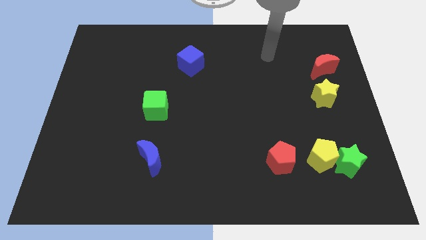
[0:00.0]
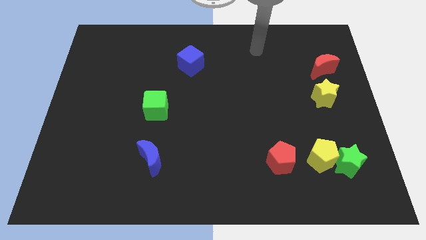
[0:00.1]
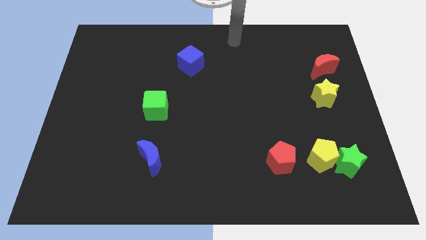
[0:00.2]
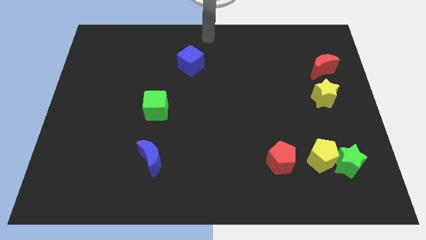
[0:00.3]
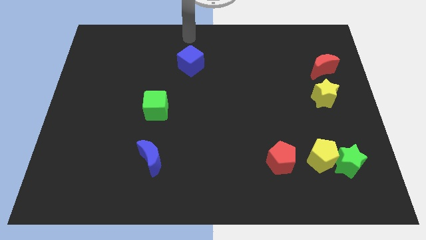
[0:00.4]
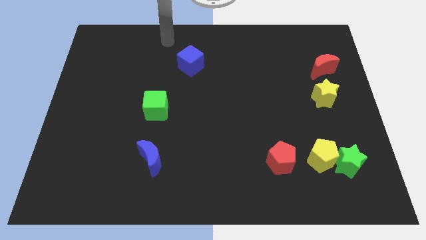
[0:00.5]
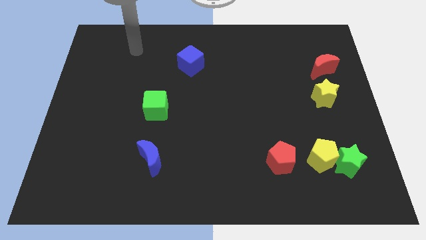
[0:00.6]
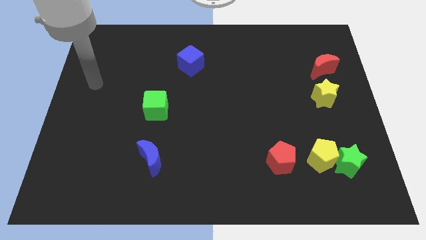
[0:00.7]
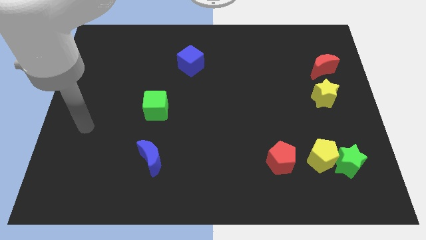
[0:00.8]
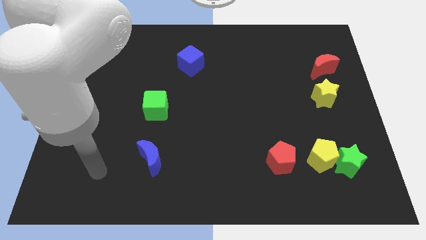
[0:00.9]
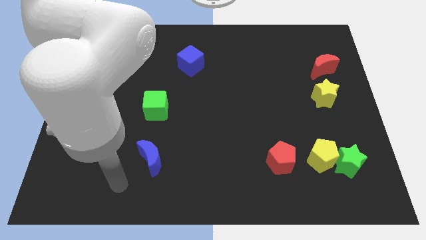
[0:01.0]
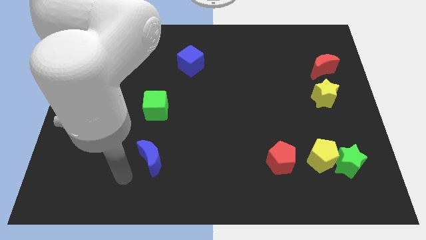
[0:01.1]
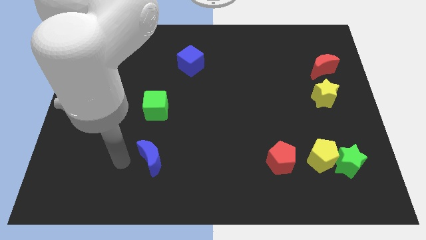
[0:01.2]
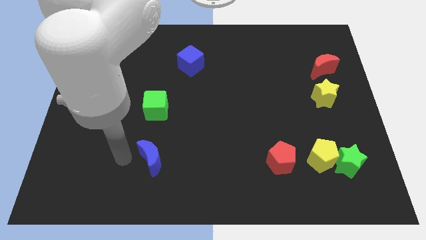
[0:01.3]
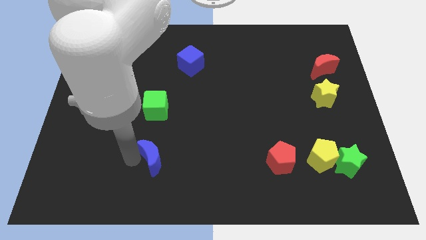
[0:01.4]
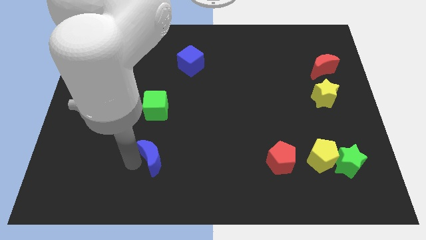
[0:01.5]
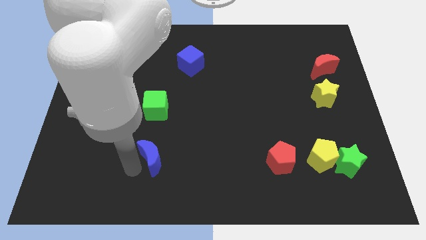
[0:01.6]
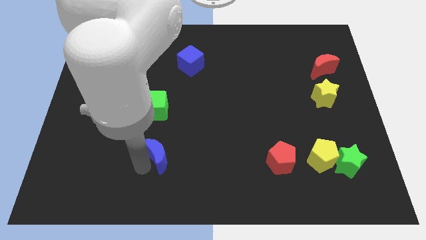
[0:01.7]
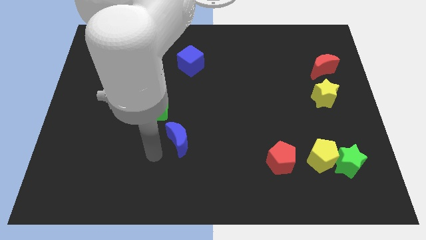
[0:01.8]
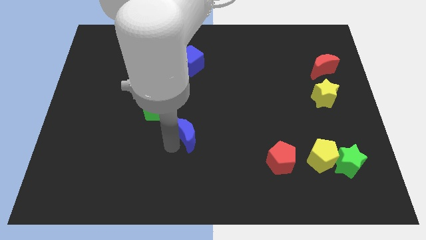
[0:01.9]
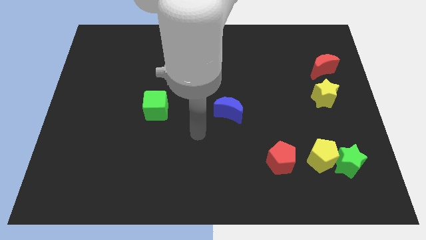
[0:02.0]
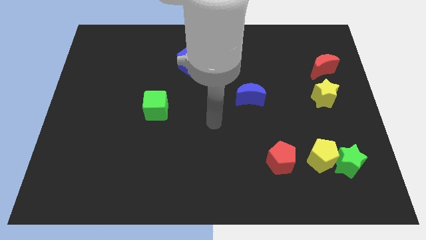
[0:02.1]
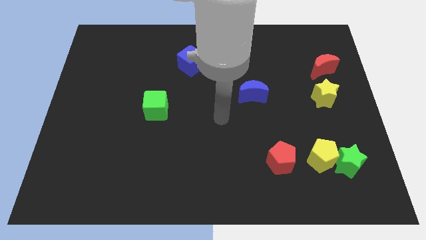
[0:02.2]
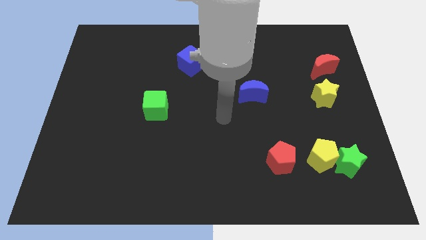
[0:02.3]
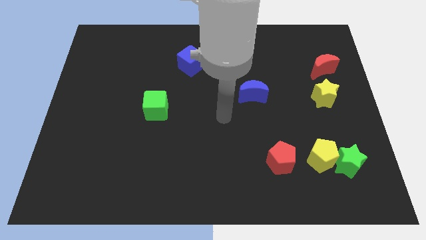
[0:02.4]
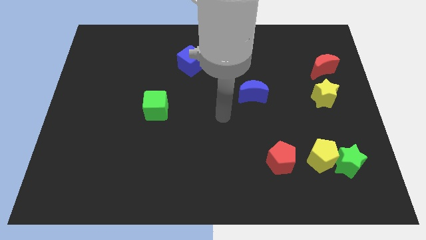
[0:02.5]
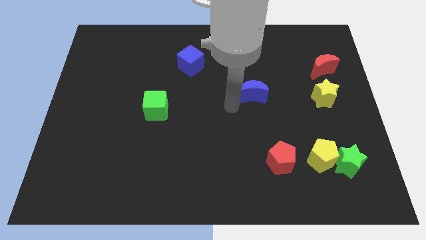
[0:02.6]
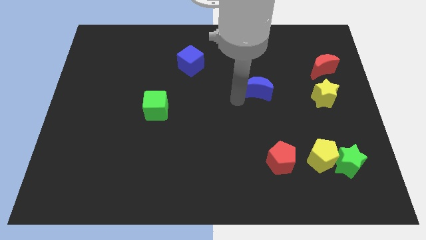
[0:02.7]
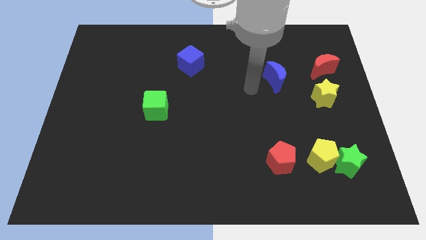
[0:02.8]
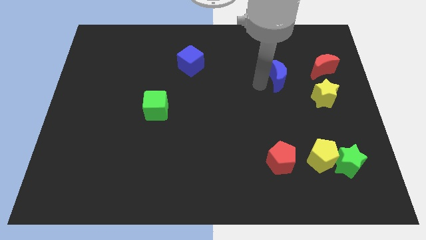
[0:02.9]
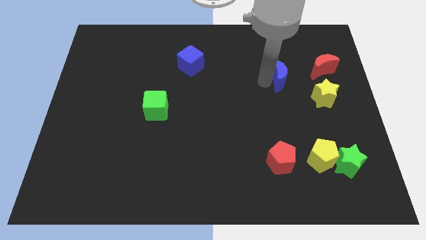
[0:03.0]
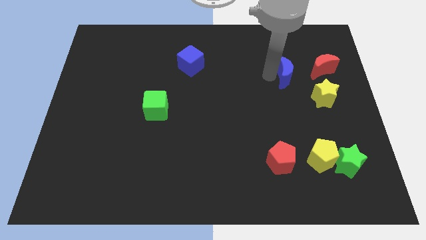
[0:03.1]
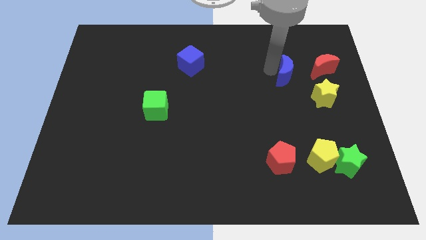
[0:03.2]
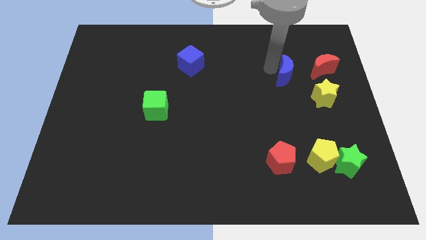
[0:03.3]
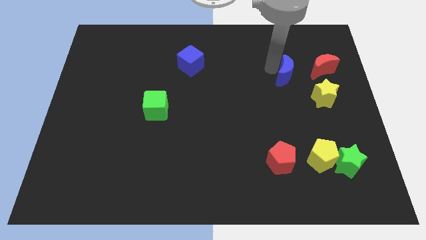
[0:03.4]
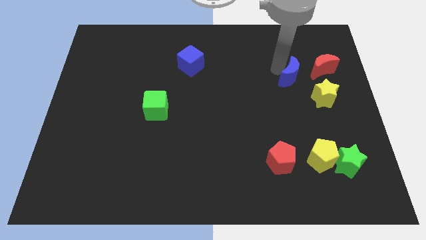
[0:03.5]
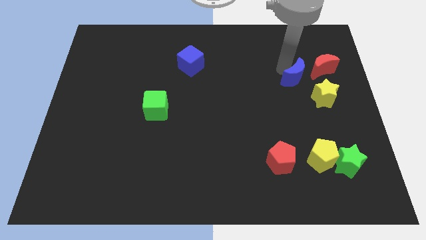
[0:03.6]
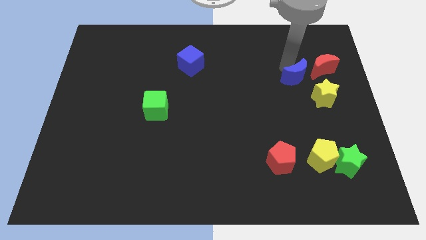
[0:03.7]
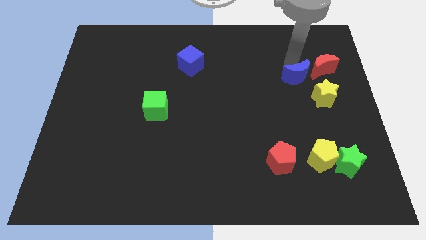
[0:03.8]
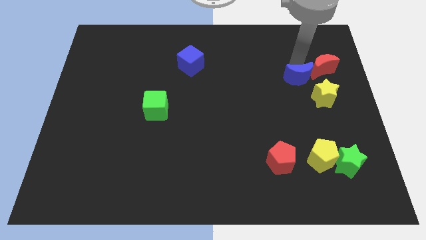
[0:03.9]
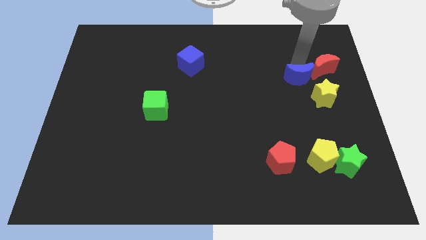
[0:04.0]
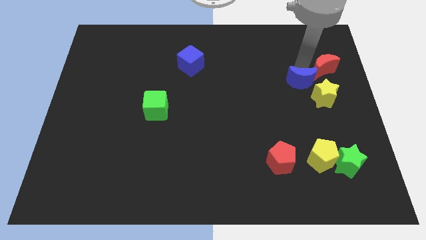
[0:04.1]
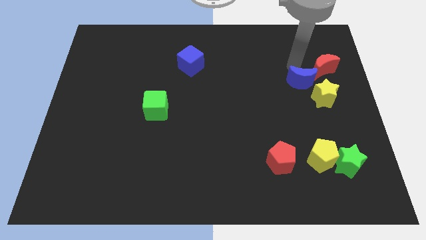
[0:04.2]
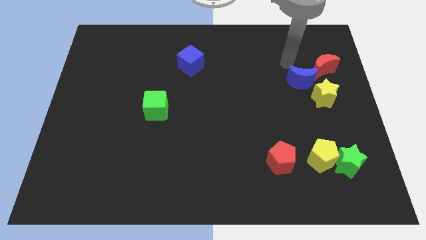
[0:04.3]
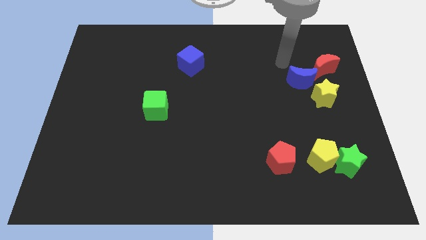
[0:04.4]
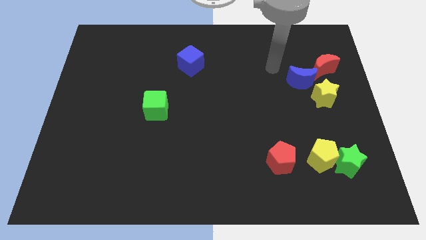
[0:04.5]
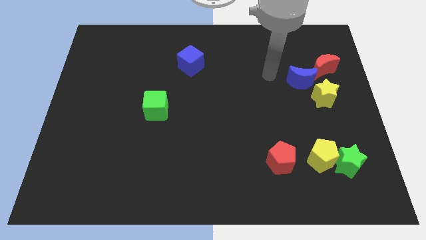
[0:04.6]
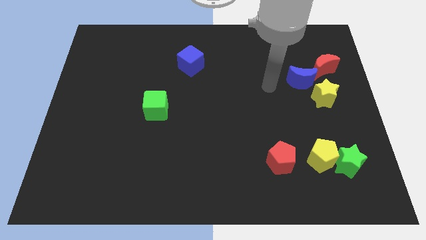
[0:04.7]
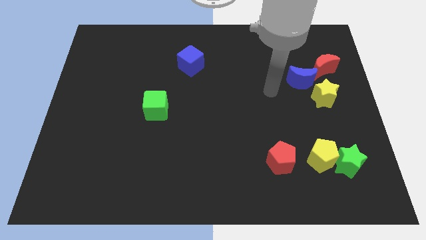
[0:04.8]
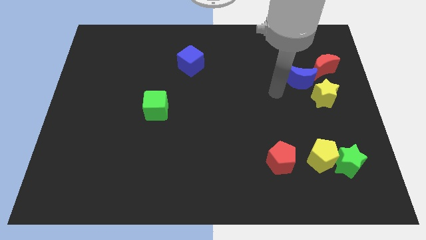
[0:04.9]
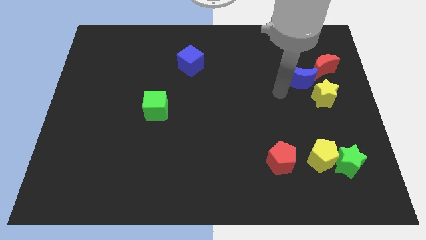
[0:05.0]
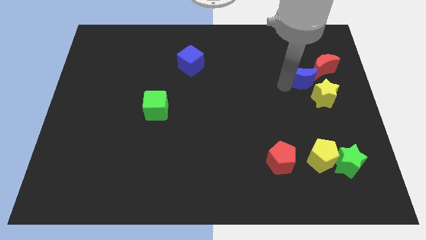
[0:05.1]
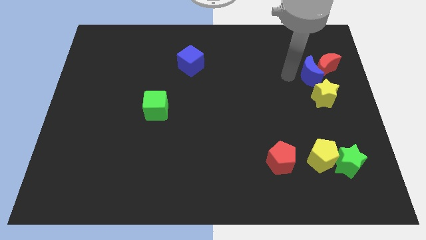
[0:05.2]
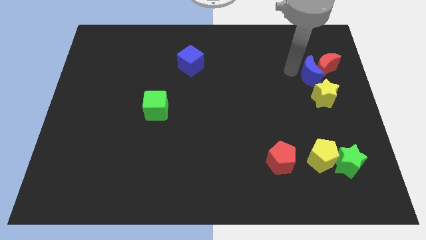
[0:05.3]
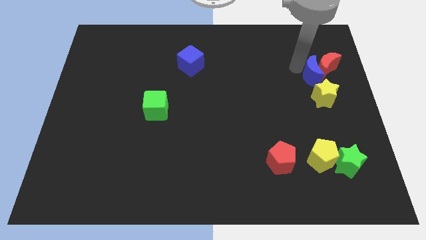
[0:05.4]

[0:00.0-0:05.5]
put the blue moon to the red moon

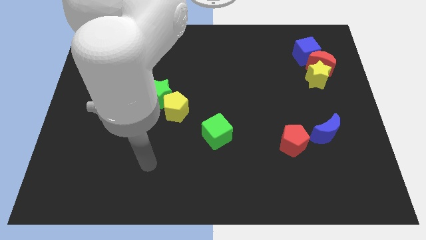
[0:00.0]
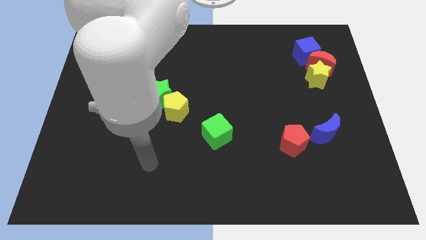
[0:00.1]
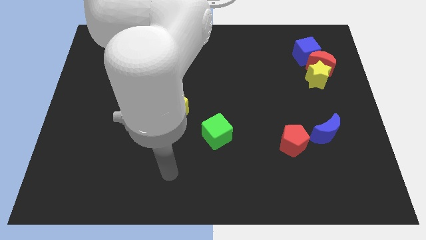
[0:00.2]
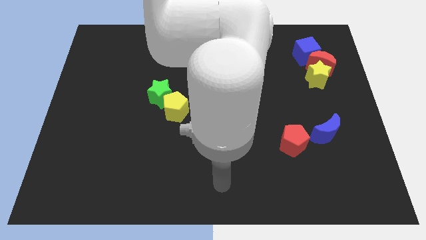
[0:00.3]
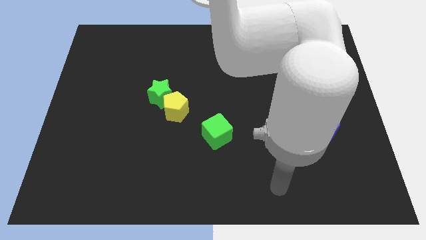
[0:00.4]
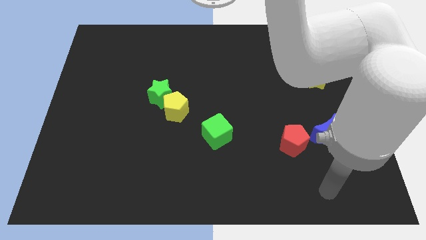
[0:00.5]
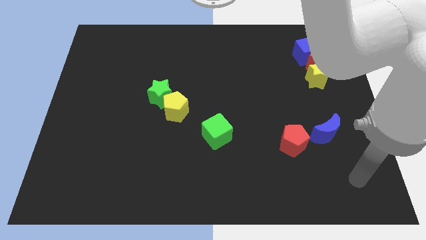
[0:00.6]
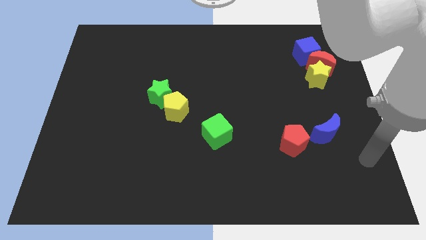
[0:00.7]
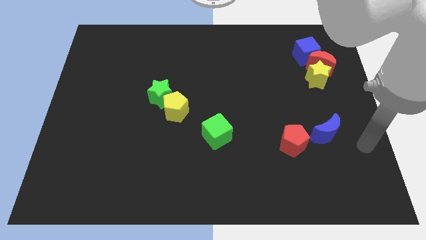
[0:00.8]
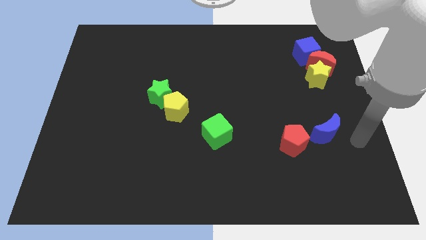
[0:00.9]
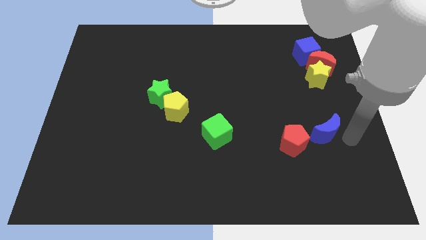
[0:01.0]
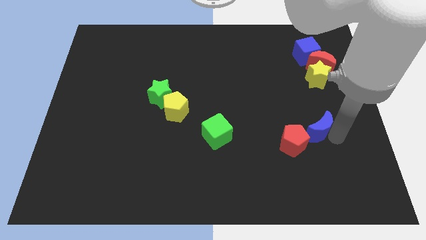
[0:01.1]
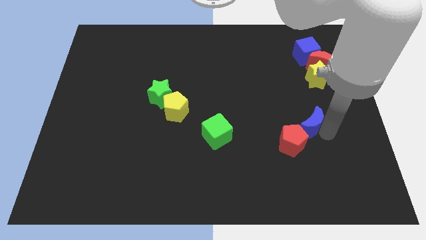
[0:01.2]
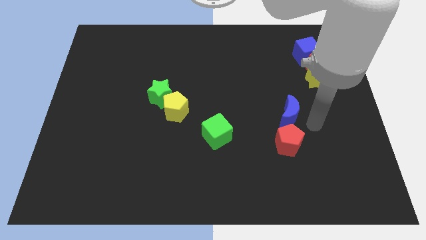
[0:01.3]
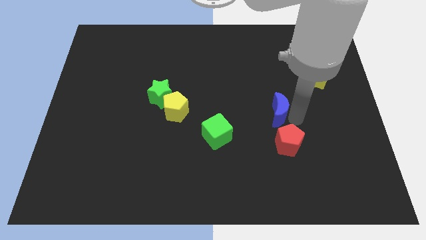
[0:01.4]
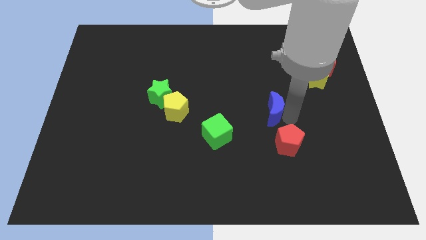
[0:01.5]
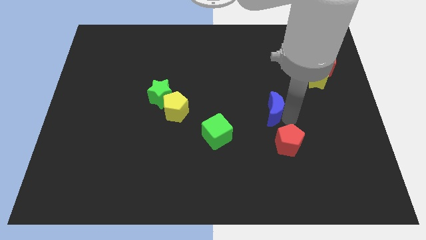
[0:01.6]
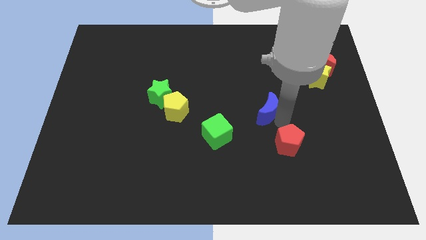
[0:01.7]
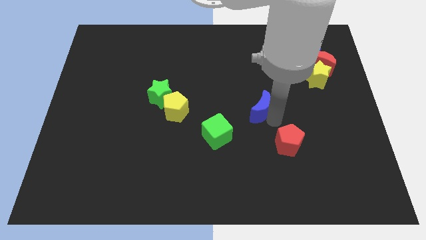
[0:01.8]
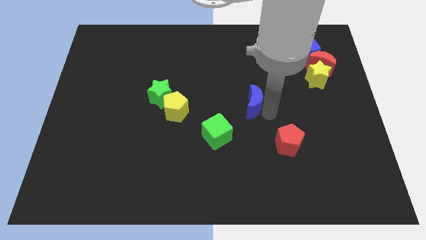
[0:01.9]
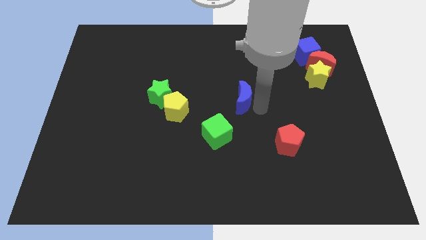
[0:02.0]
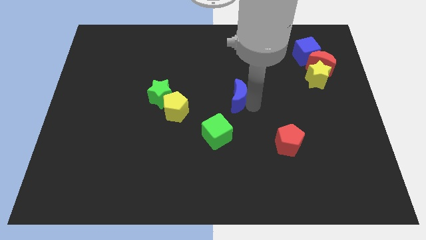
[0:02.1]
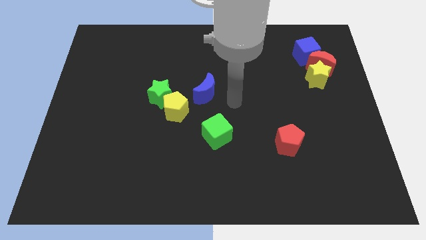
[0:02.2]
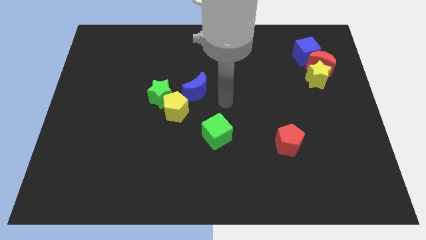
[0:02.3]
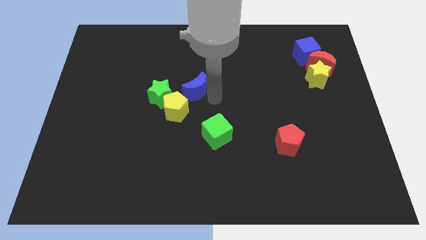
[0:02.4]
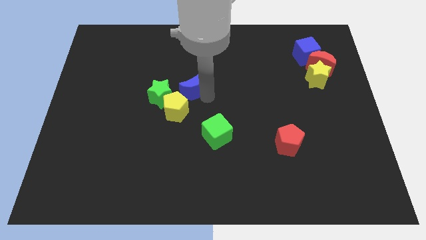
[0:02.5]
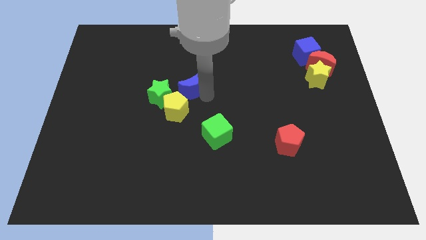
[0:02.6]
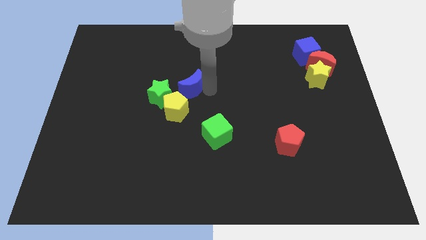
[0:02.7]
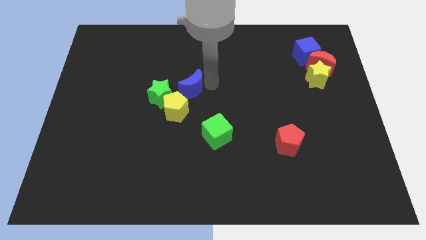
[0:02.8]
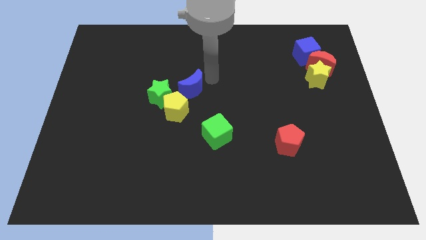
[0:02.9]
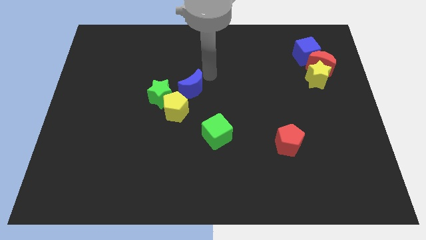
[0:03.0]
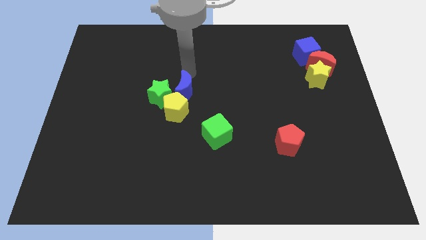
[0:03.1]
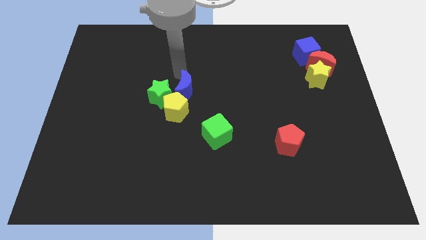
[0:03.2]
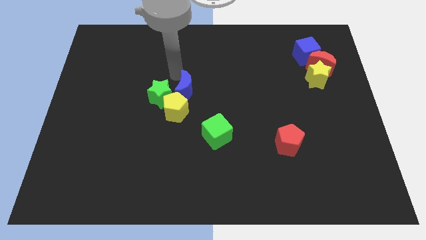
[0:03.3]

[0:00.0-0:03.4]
slide the blue moon close to the green star
